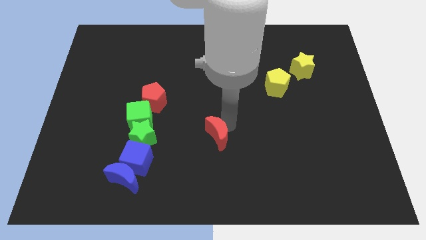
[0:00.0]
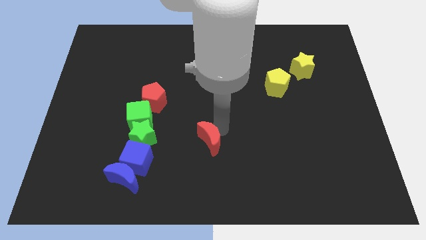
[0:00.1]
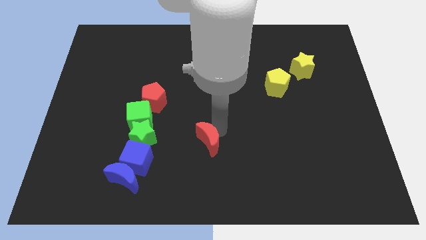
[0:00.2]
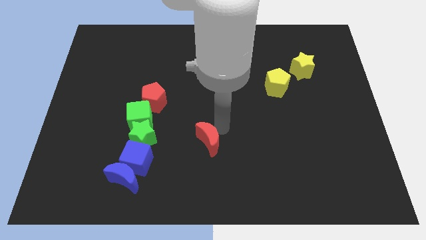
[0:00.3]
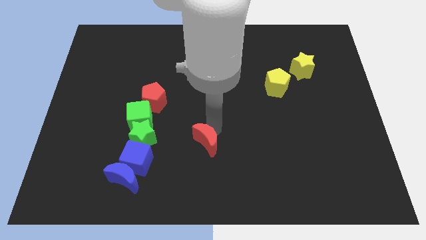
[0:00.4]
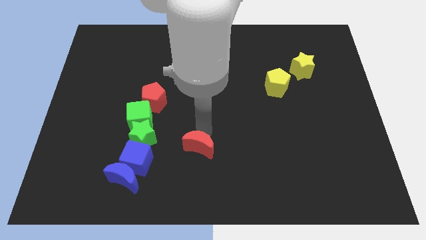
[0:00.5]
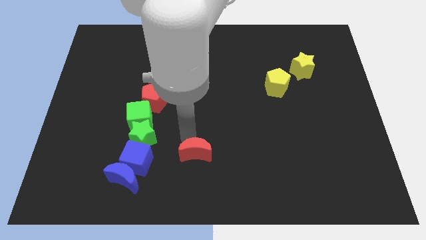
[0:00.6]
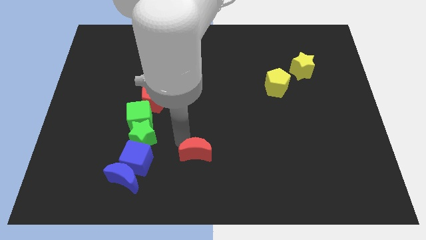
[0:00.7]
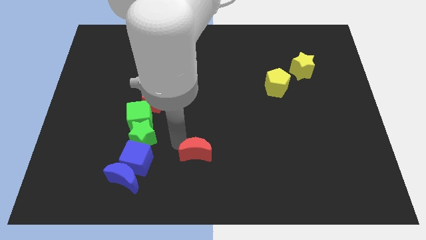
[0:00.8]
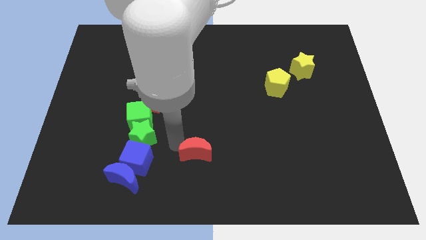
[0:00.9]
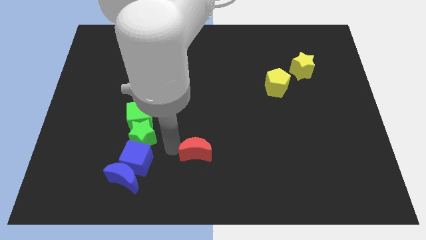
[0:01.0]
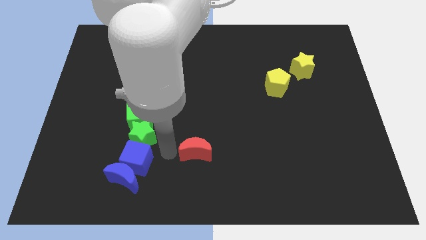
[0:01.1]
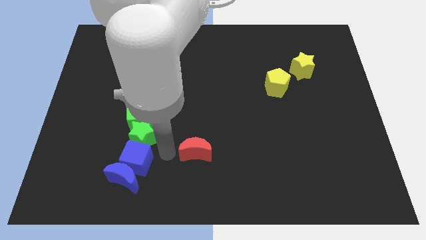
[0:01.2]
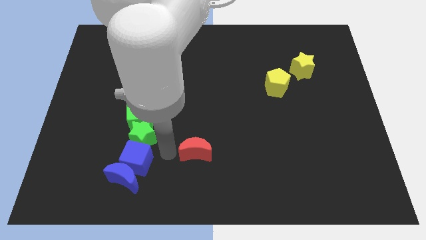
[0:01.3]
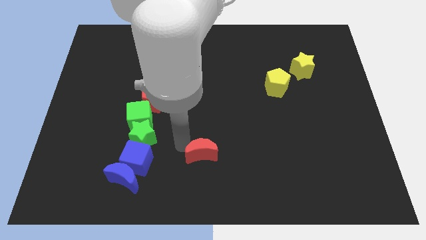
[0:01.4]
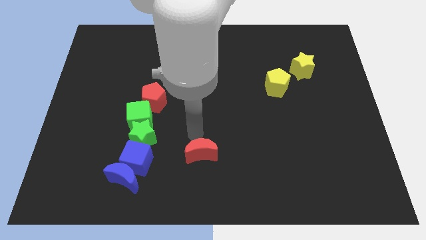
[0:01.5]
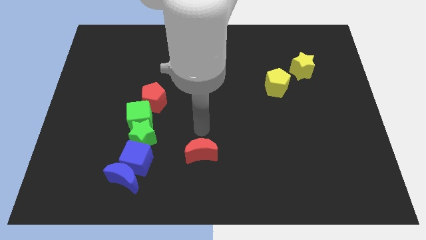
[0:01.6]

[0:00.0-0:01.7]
put the red moon right to the blue cube

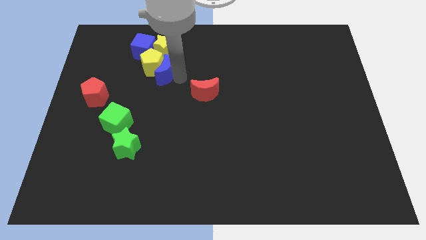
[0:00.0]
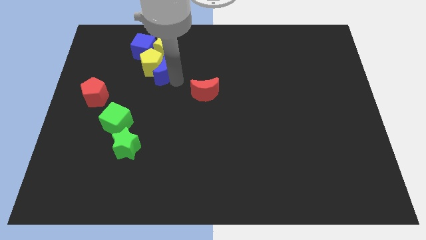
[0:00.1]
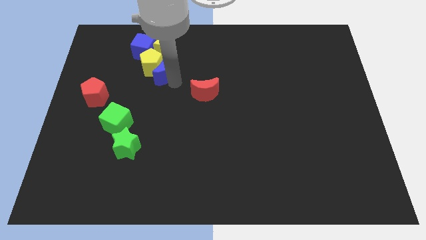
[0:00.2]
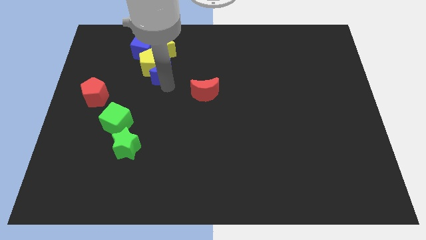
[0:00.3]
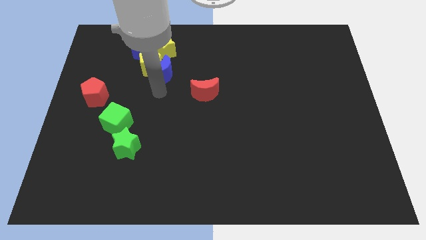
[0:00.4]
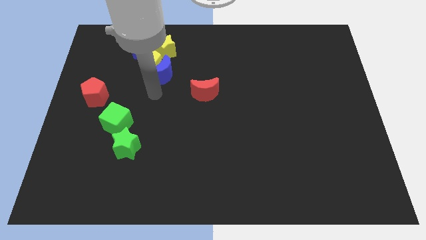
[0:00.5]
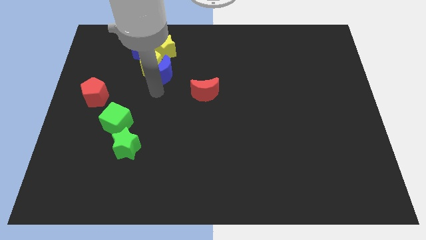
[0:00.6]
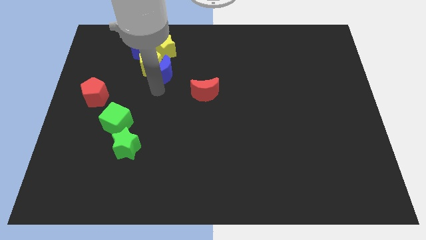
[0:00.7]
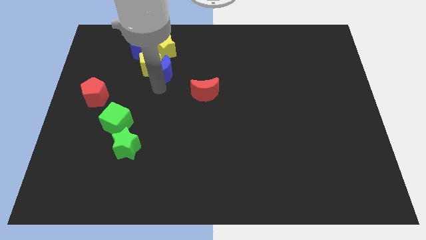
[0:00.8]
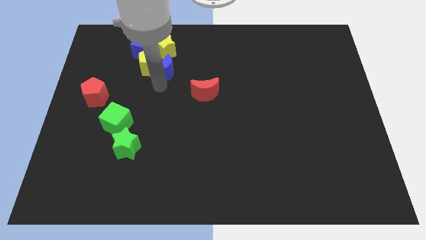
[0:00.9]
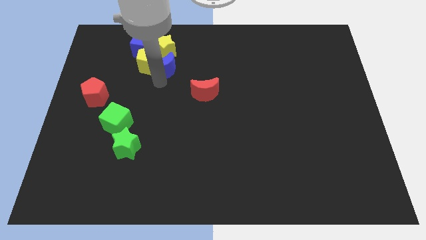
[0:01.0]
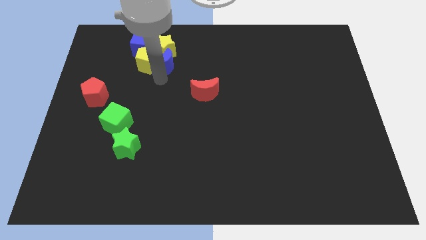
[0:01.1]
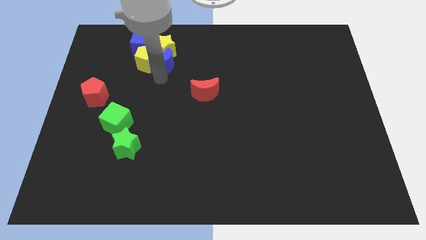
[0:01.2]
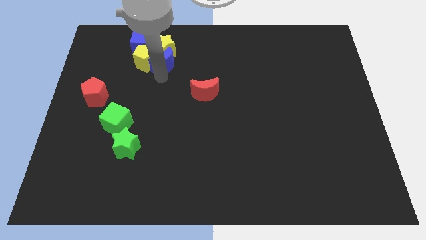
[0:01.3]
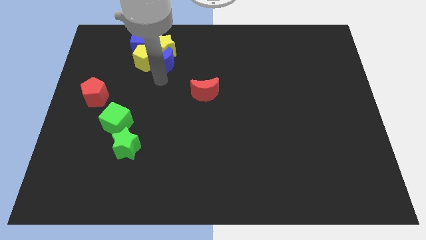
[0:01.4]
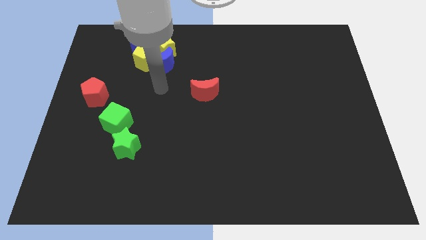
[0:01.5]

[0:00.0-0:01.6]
push blue crescent into the yellow pentagon

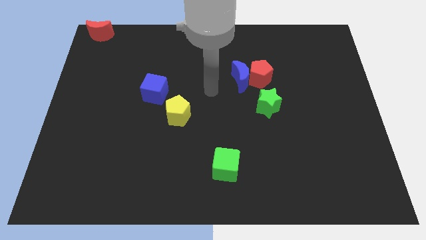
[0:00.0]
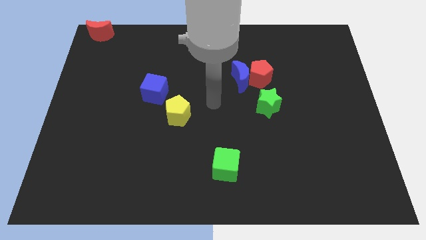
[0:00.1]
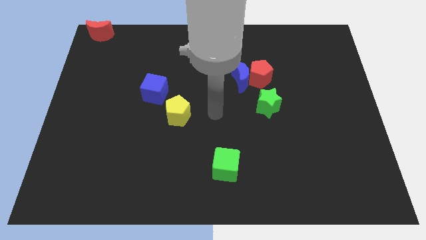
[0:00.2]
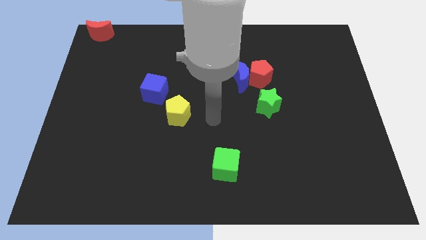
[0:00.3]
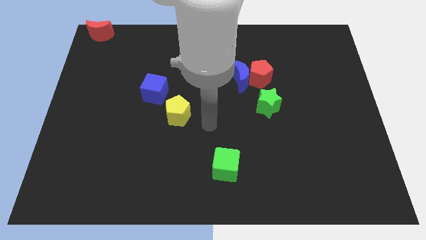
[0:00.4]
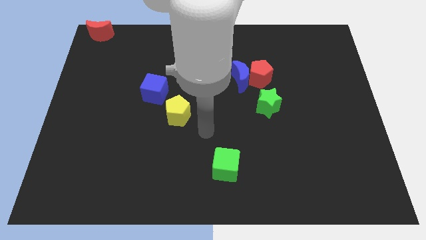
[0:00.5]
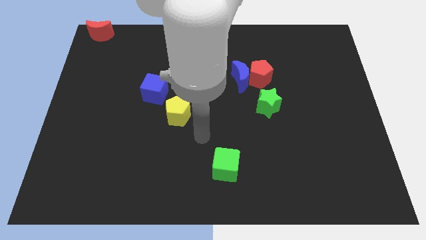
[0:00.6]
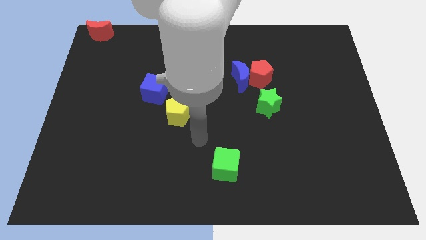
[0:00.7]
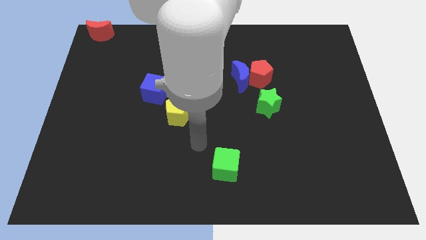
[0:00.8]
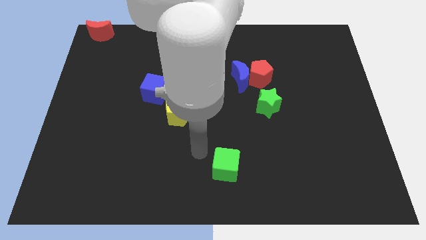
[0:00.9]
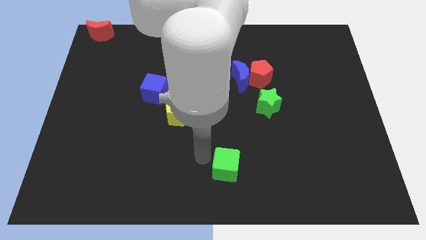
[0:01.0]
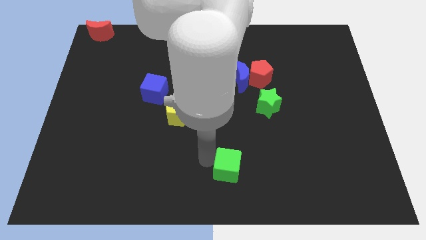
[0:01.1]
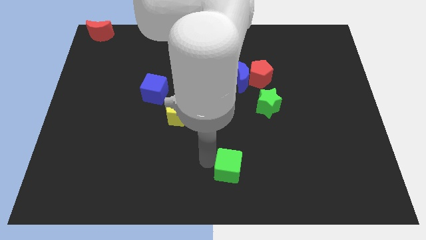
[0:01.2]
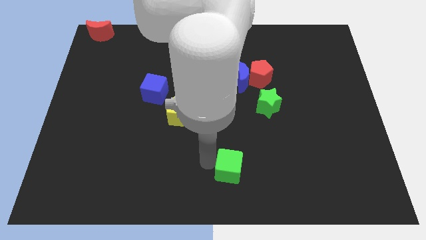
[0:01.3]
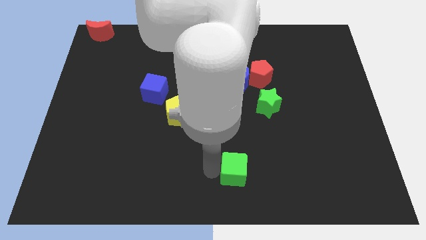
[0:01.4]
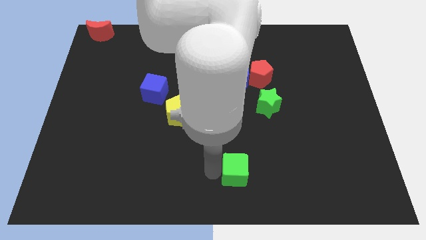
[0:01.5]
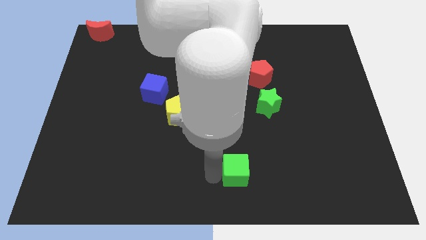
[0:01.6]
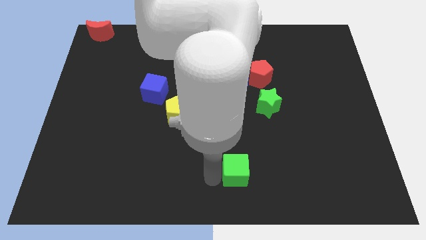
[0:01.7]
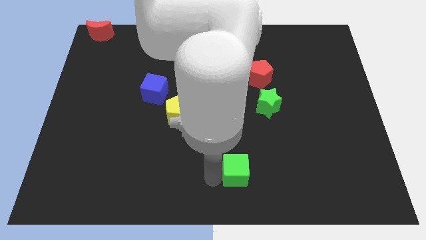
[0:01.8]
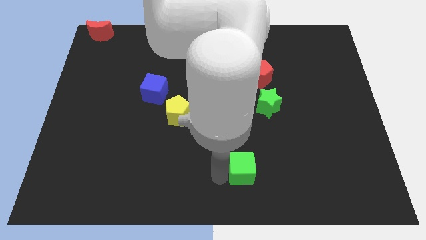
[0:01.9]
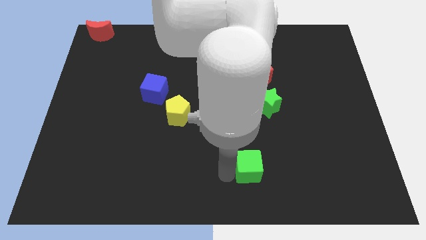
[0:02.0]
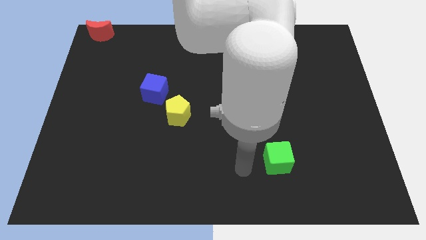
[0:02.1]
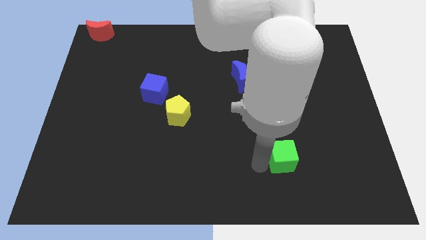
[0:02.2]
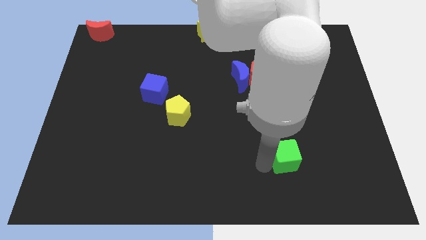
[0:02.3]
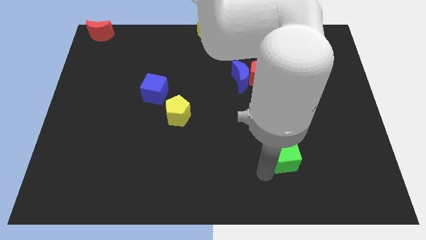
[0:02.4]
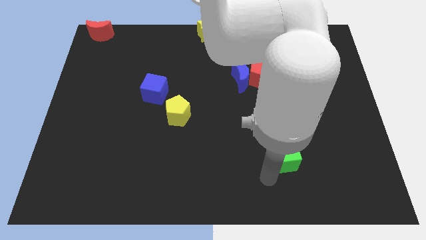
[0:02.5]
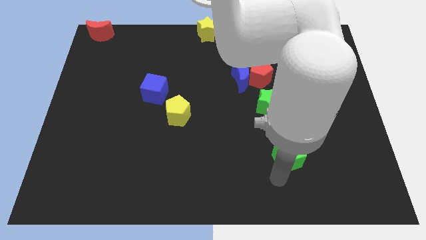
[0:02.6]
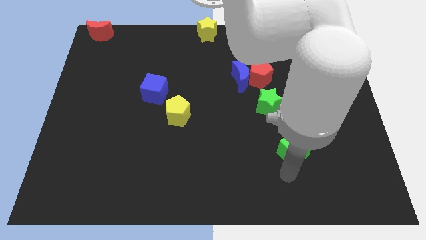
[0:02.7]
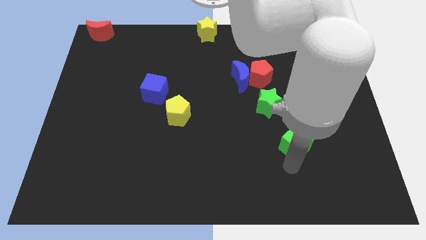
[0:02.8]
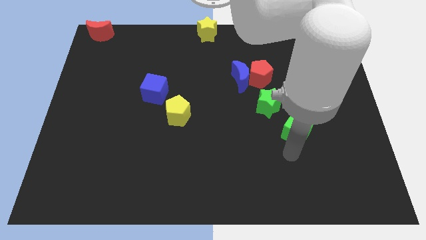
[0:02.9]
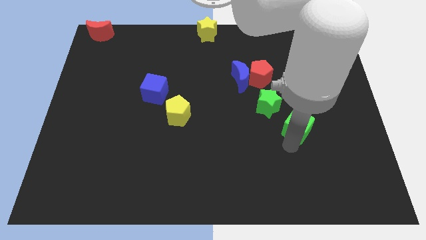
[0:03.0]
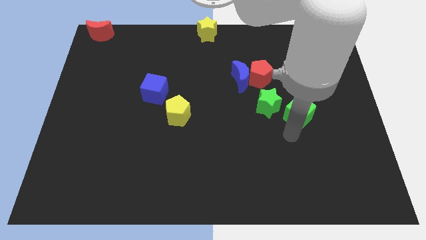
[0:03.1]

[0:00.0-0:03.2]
place the green cube diagonally to the green star

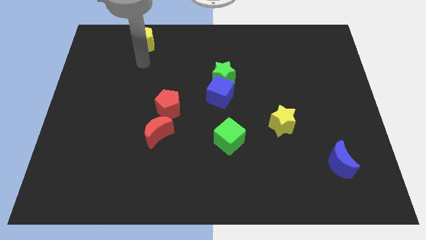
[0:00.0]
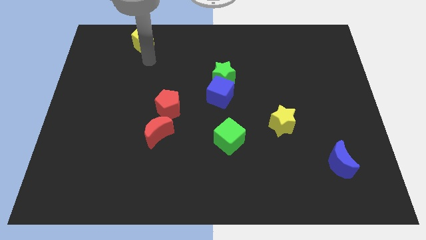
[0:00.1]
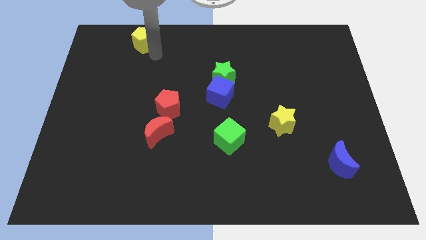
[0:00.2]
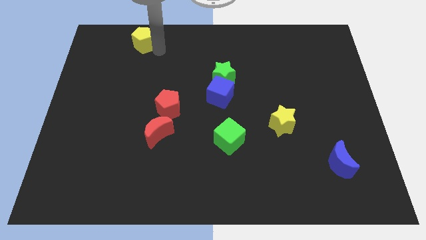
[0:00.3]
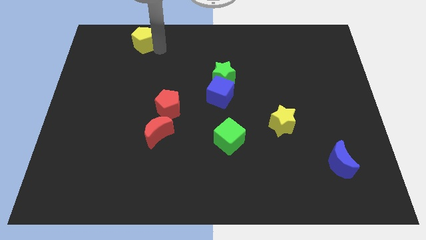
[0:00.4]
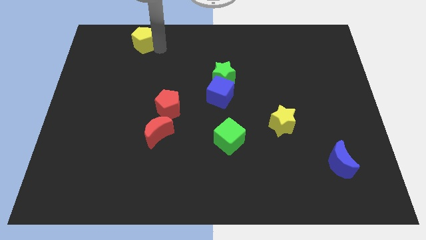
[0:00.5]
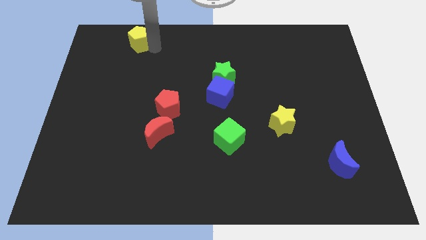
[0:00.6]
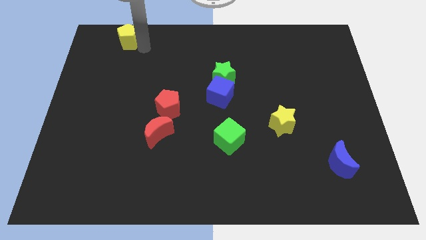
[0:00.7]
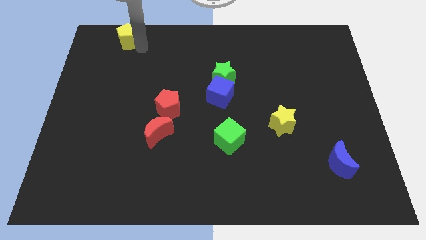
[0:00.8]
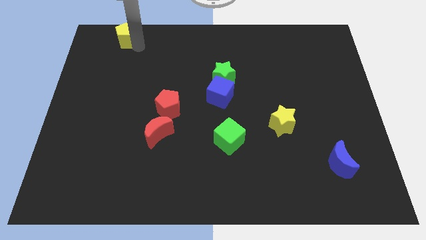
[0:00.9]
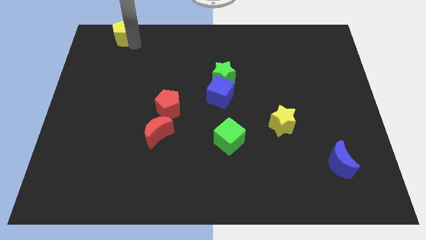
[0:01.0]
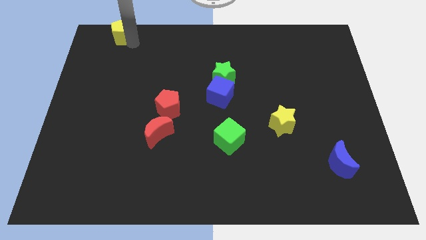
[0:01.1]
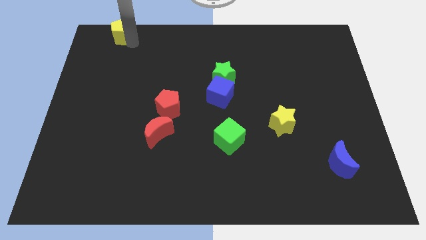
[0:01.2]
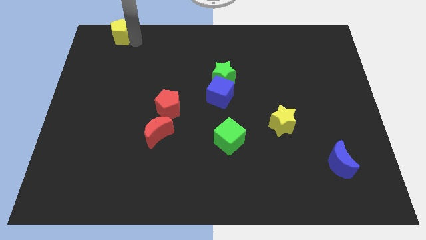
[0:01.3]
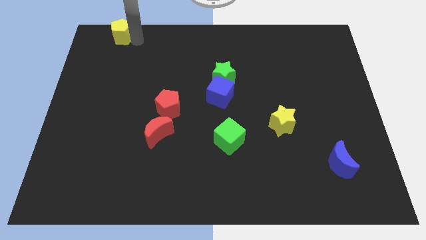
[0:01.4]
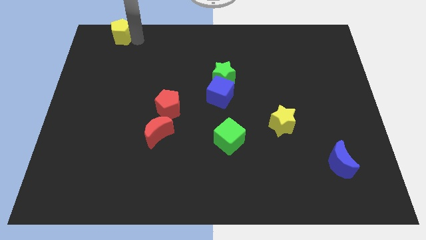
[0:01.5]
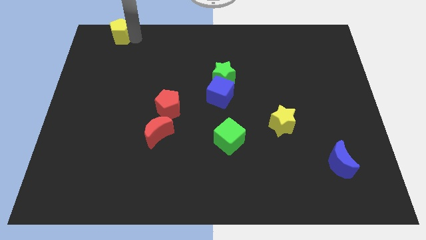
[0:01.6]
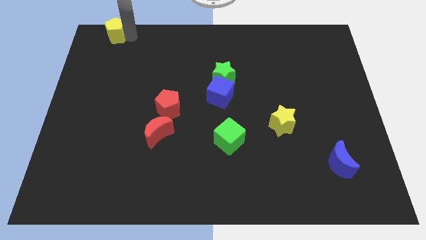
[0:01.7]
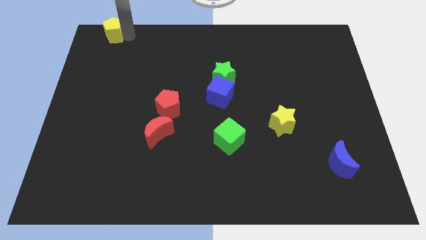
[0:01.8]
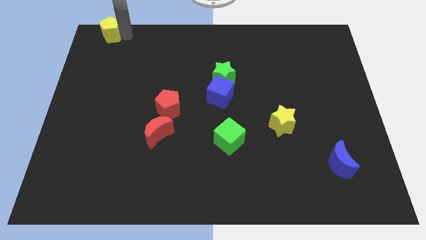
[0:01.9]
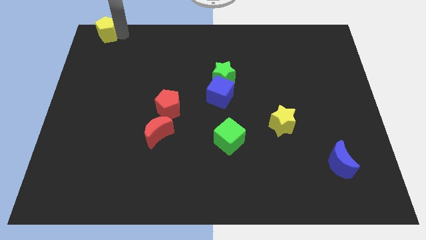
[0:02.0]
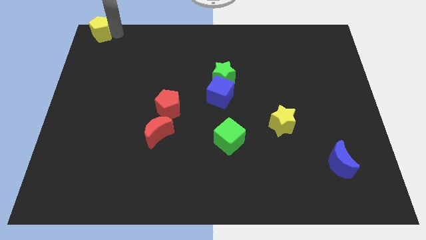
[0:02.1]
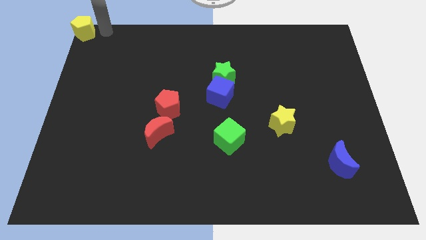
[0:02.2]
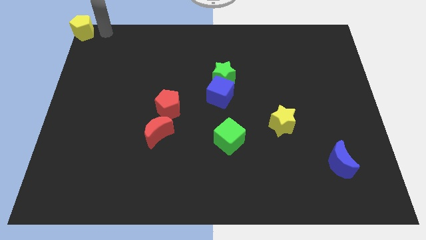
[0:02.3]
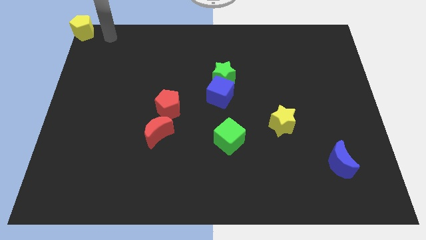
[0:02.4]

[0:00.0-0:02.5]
move the yellow pentagon to the top left corner of the board
